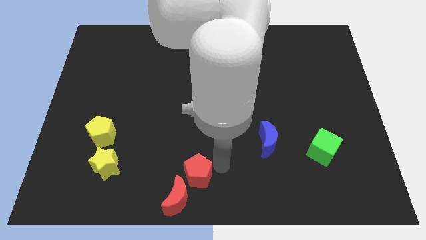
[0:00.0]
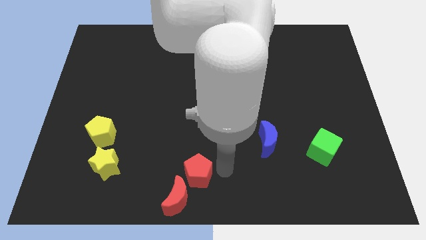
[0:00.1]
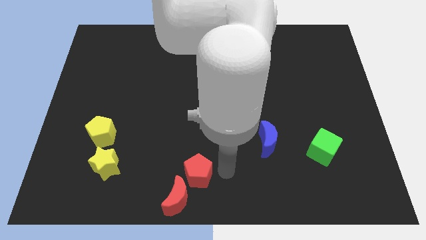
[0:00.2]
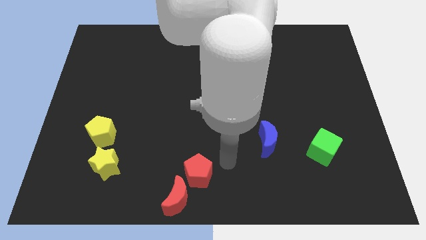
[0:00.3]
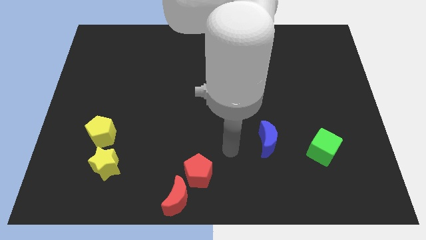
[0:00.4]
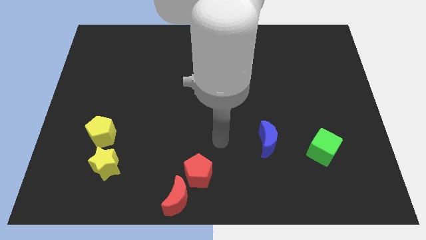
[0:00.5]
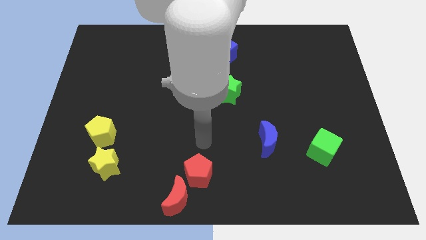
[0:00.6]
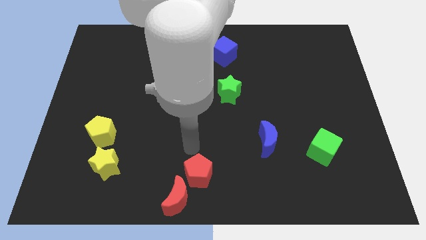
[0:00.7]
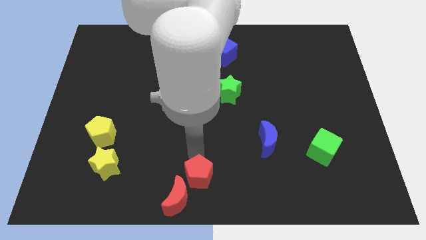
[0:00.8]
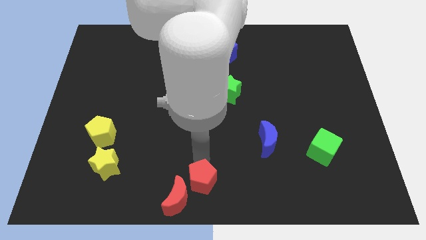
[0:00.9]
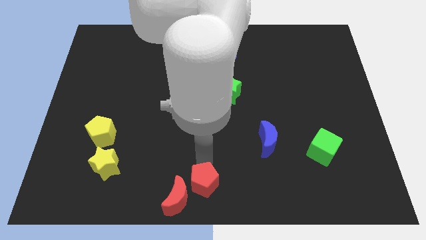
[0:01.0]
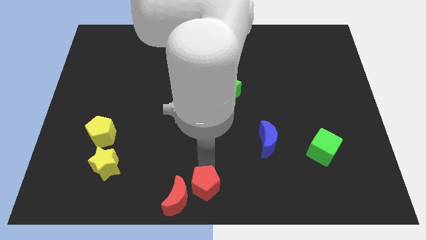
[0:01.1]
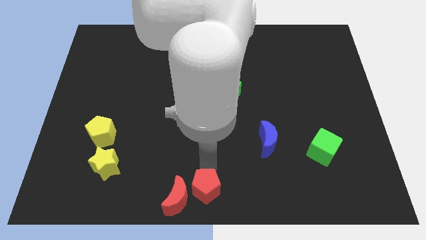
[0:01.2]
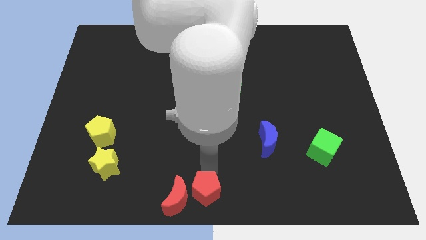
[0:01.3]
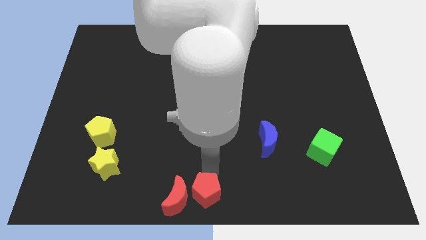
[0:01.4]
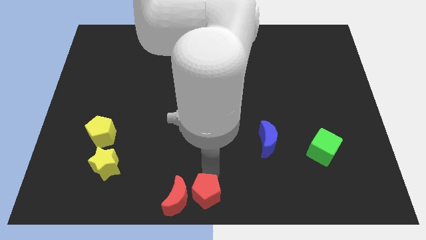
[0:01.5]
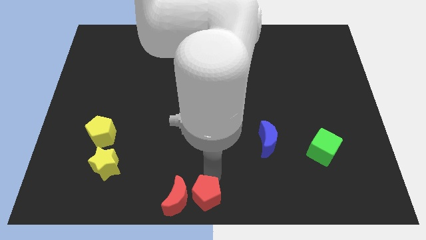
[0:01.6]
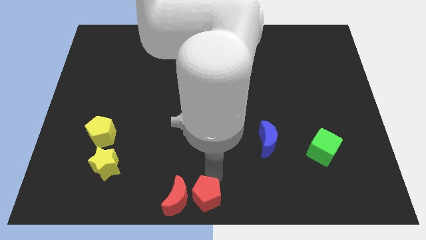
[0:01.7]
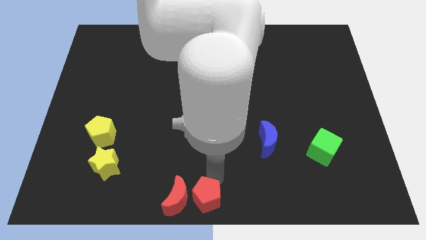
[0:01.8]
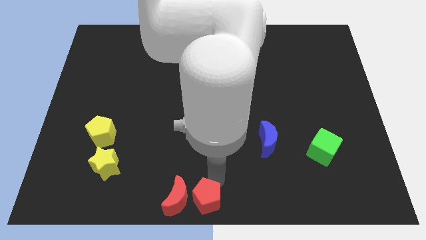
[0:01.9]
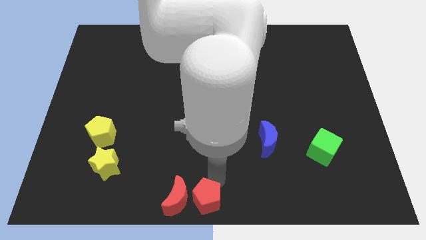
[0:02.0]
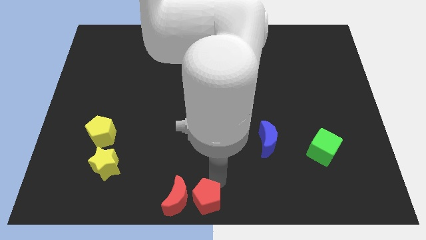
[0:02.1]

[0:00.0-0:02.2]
push the red pentagon to the right side of the red crescent

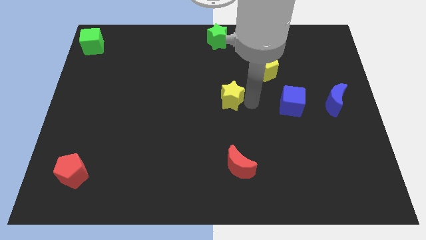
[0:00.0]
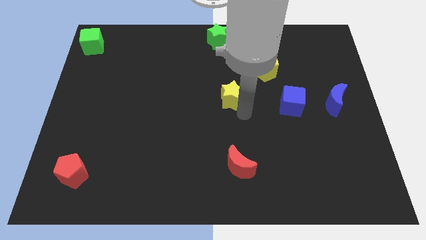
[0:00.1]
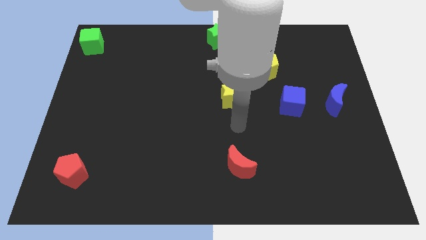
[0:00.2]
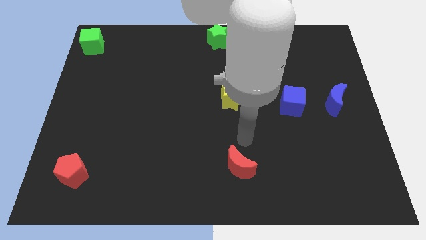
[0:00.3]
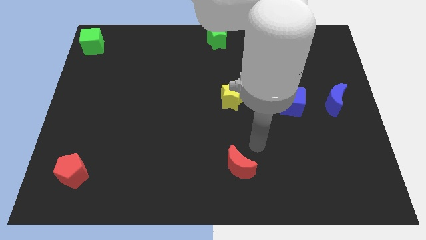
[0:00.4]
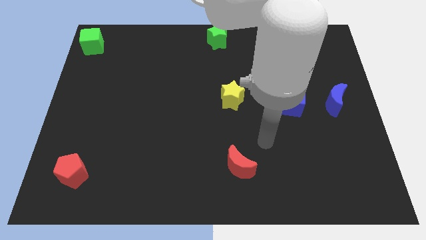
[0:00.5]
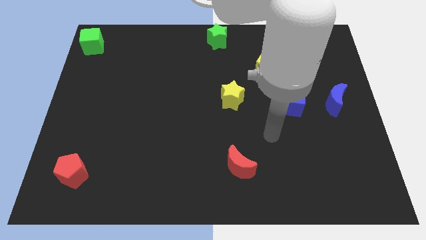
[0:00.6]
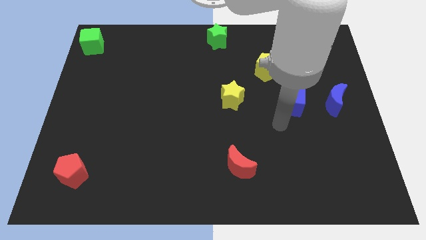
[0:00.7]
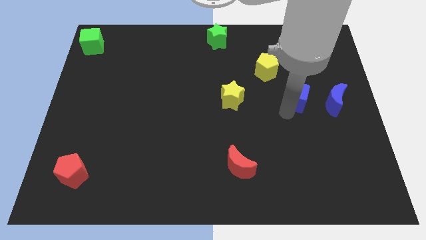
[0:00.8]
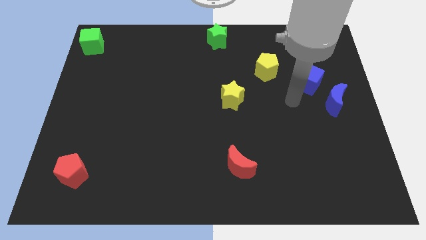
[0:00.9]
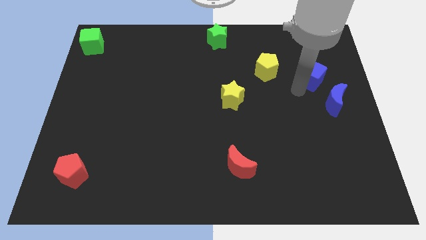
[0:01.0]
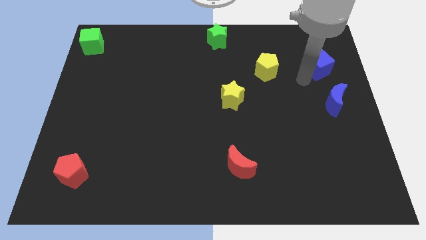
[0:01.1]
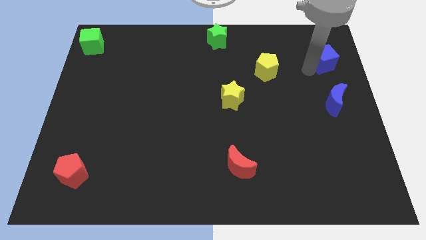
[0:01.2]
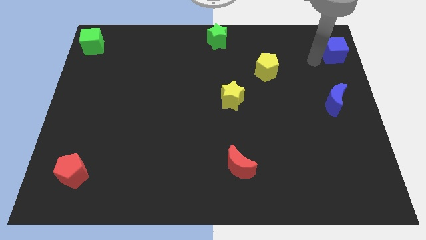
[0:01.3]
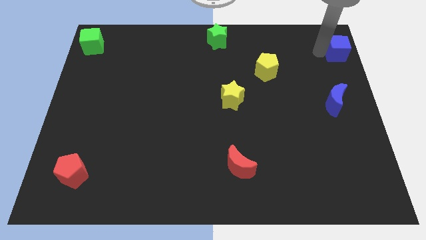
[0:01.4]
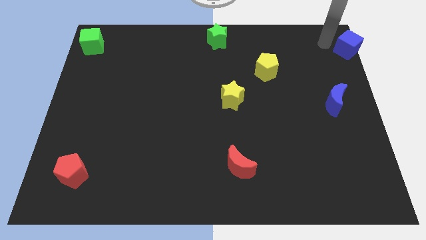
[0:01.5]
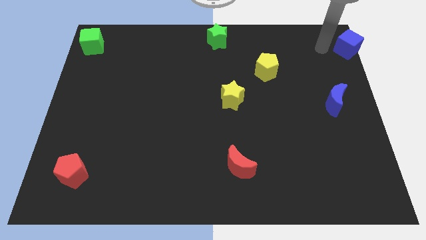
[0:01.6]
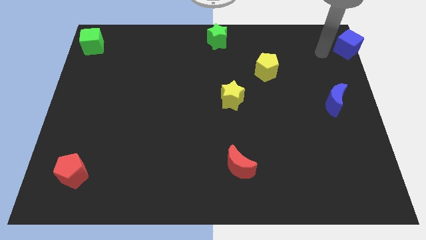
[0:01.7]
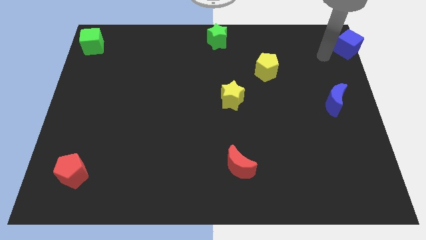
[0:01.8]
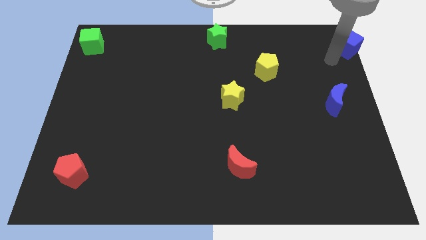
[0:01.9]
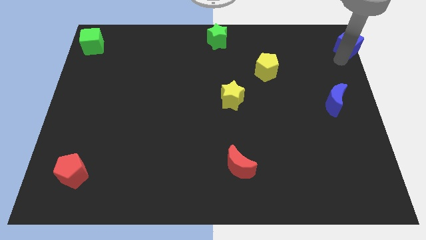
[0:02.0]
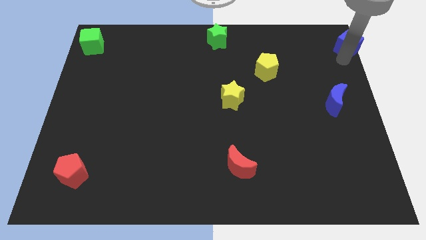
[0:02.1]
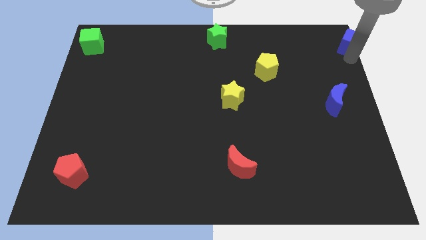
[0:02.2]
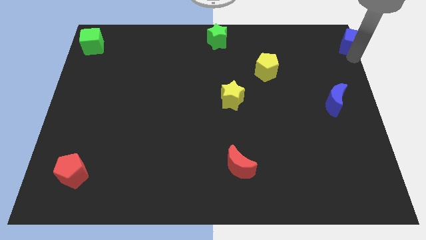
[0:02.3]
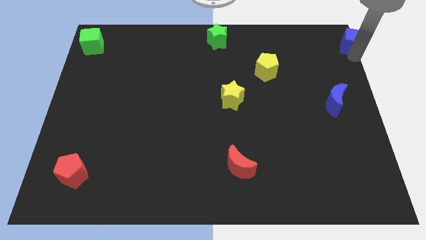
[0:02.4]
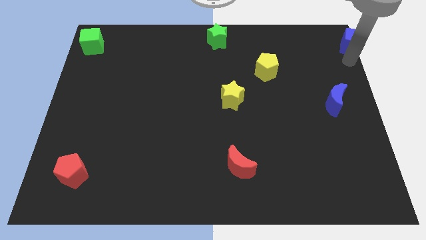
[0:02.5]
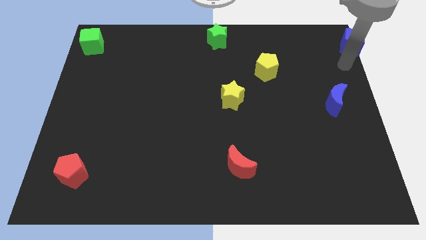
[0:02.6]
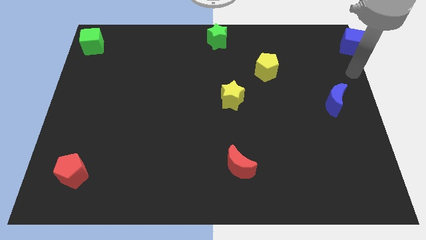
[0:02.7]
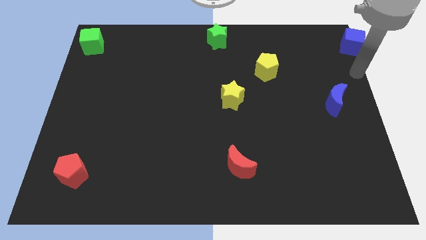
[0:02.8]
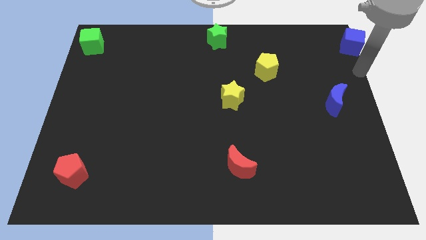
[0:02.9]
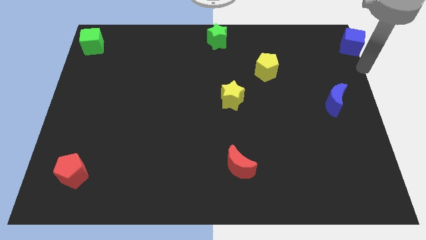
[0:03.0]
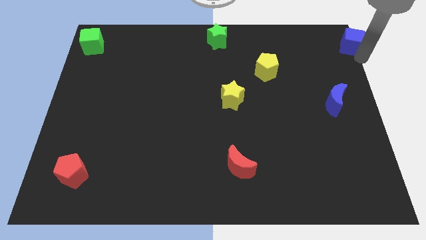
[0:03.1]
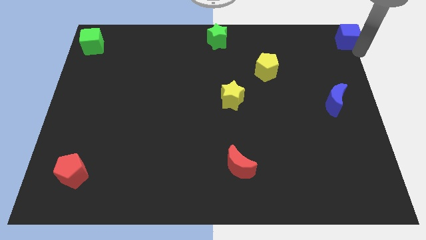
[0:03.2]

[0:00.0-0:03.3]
move the blue cube to the top right corner of the board

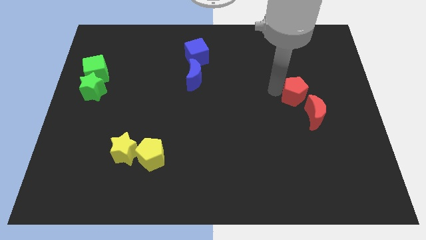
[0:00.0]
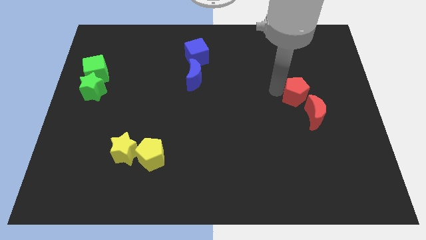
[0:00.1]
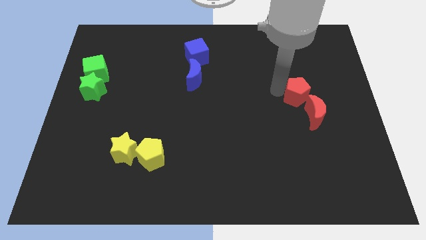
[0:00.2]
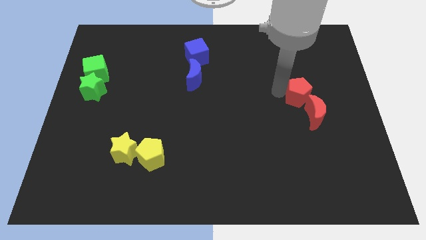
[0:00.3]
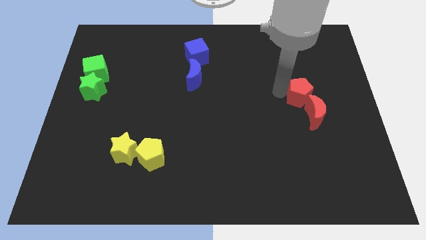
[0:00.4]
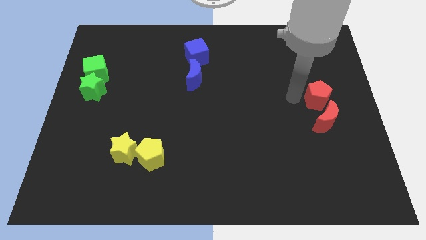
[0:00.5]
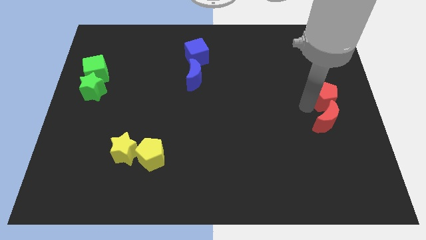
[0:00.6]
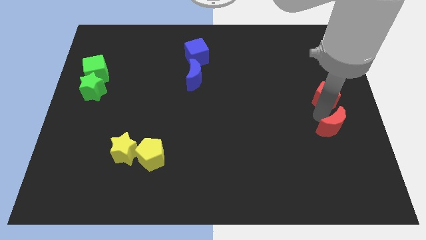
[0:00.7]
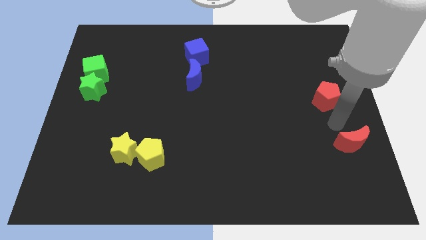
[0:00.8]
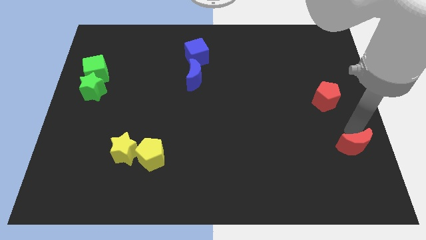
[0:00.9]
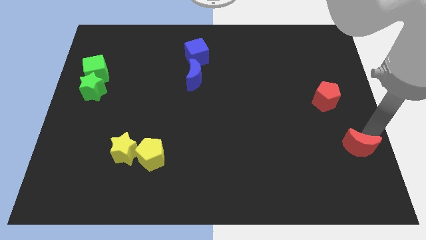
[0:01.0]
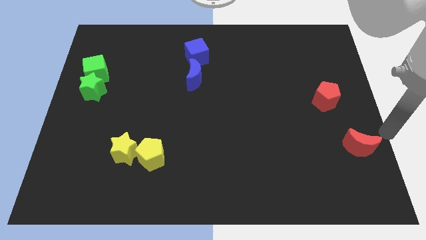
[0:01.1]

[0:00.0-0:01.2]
move the red crescent away from the red pentagon

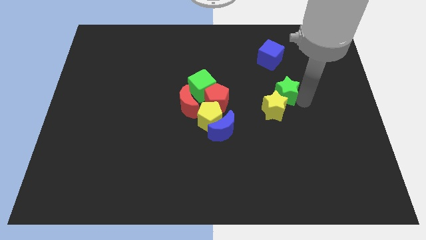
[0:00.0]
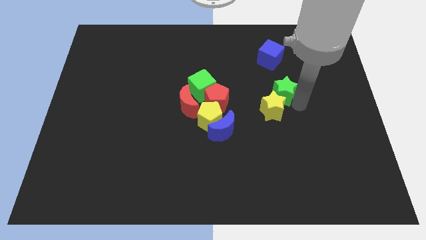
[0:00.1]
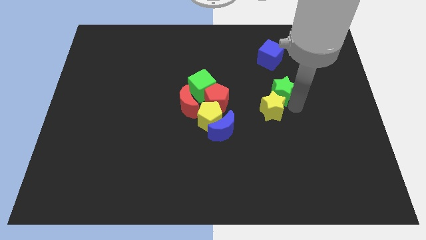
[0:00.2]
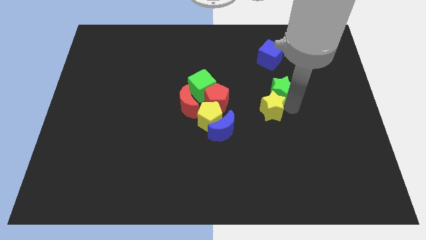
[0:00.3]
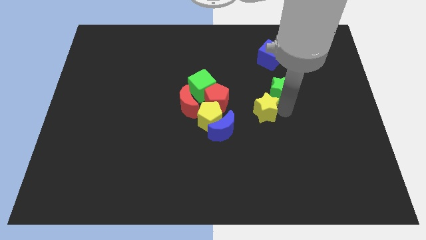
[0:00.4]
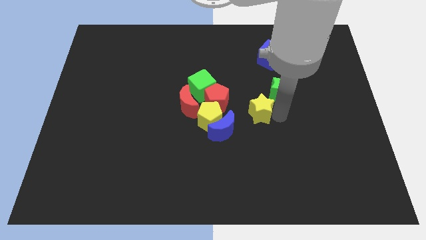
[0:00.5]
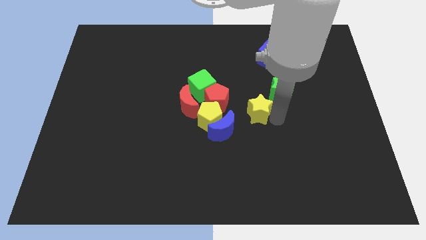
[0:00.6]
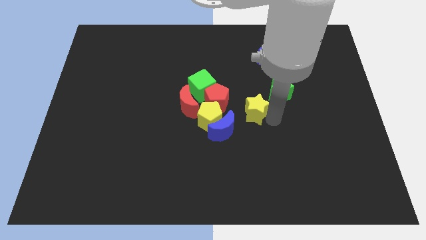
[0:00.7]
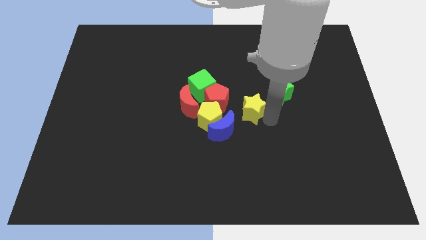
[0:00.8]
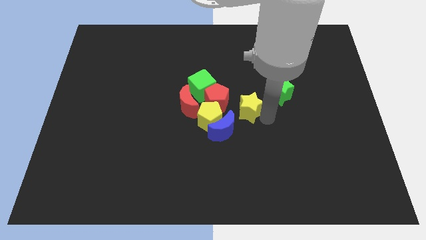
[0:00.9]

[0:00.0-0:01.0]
separate the yellow star and the green star

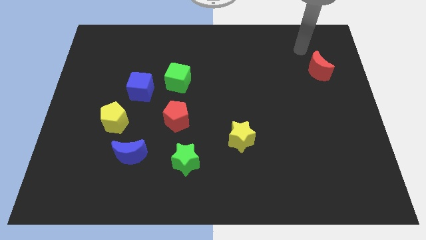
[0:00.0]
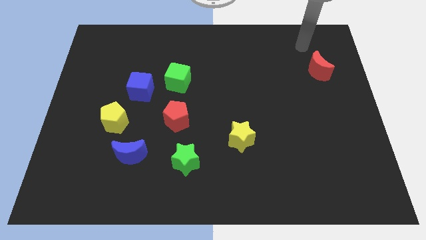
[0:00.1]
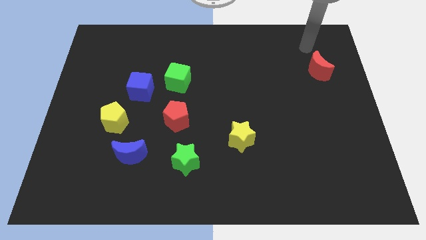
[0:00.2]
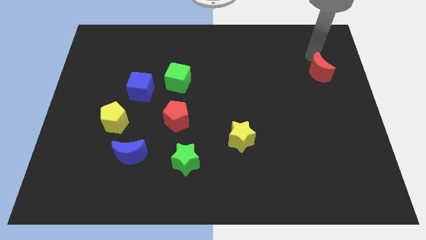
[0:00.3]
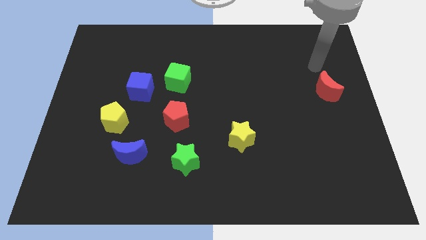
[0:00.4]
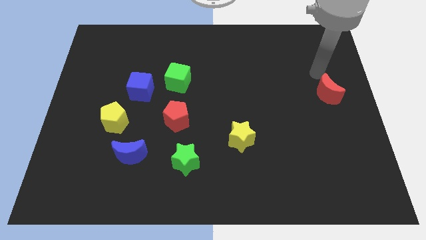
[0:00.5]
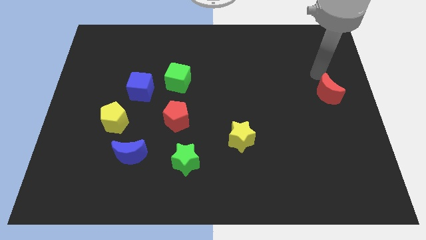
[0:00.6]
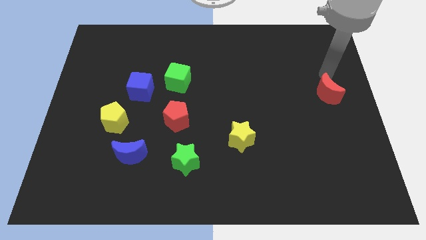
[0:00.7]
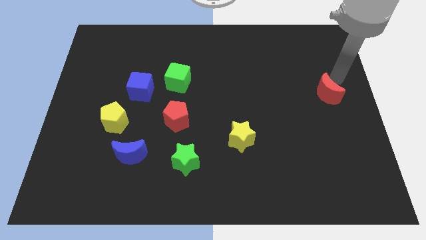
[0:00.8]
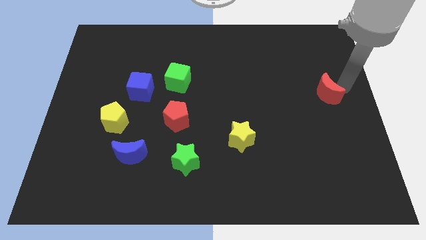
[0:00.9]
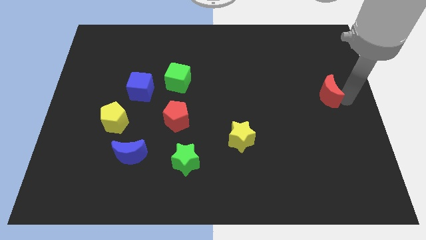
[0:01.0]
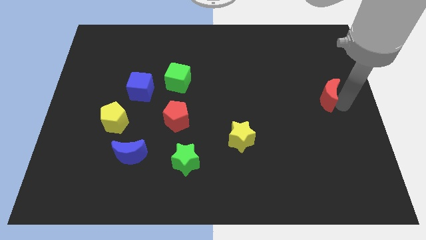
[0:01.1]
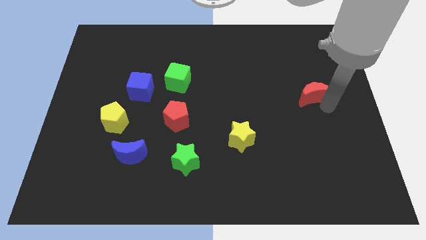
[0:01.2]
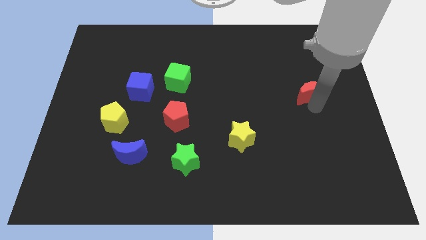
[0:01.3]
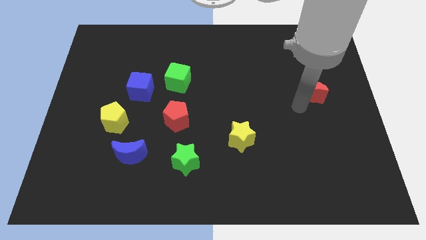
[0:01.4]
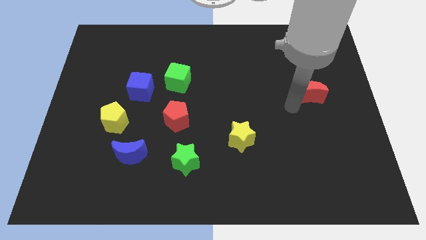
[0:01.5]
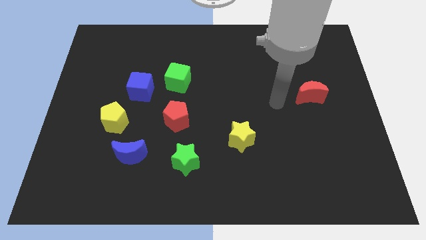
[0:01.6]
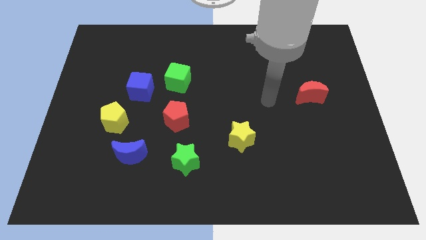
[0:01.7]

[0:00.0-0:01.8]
move the red crescent towards the bottom
